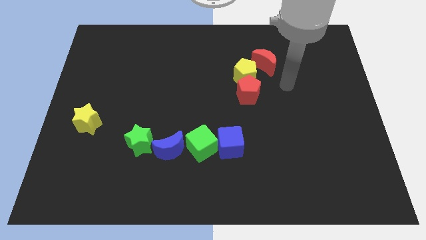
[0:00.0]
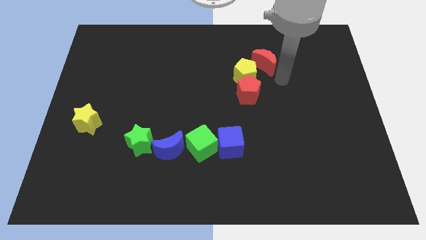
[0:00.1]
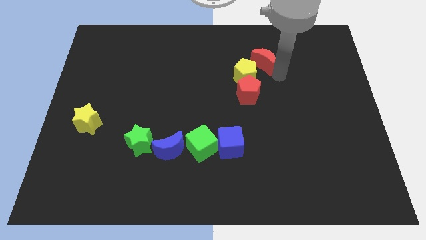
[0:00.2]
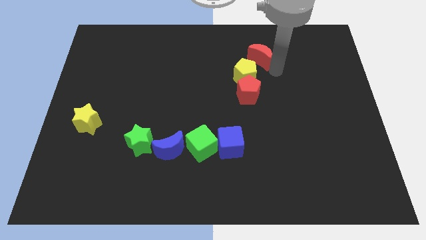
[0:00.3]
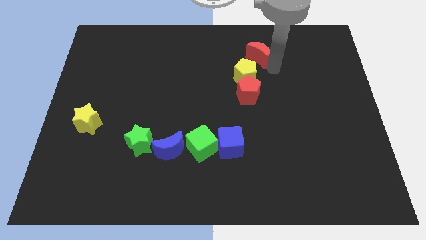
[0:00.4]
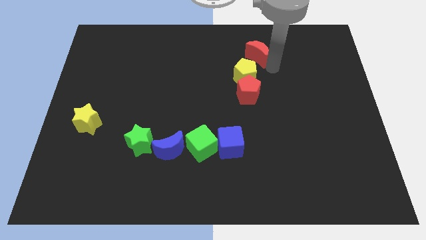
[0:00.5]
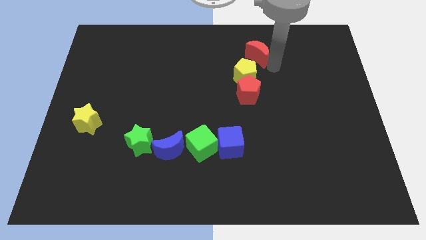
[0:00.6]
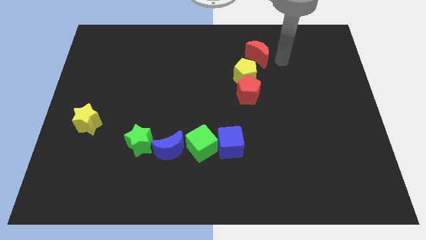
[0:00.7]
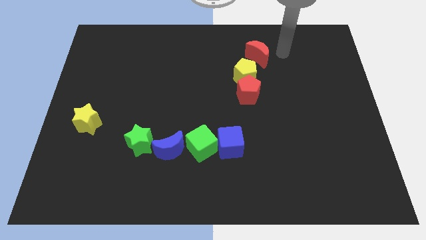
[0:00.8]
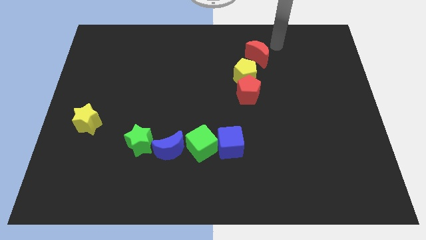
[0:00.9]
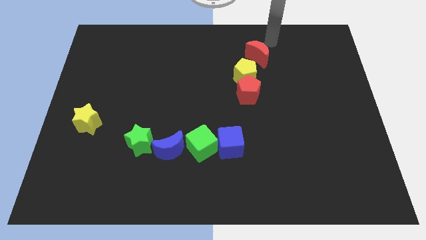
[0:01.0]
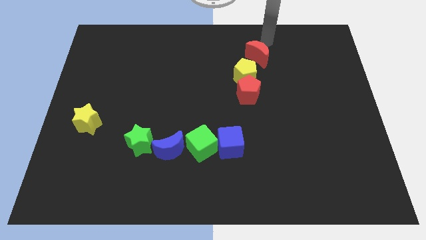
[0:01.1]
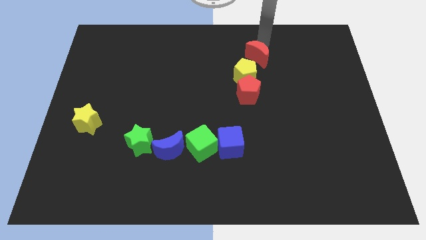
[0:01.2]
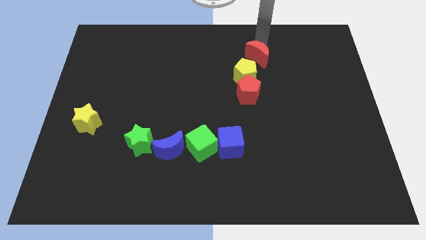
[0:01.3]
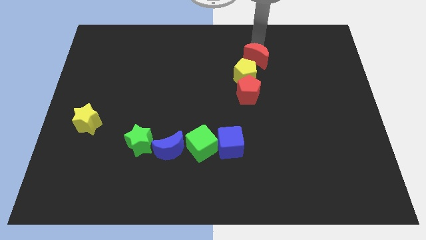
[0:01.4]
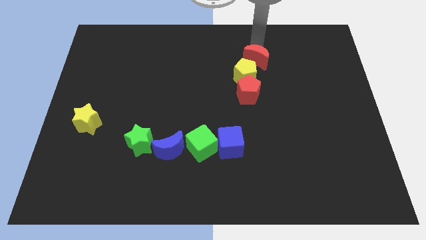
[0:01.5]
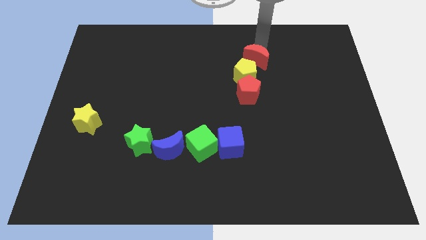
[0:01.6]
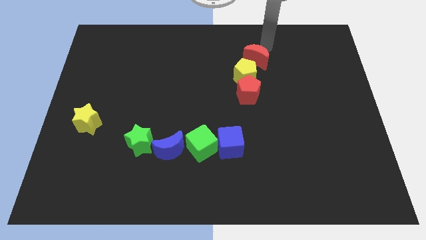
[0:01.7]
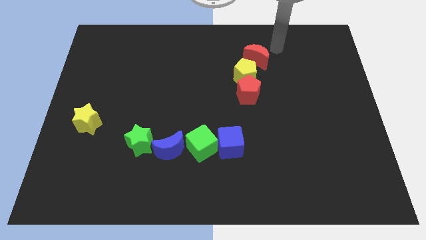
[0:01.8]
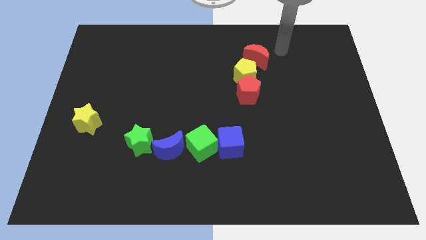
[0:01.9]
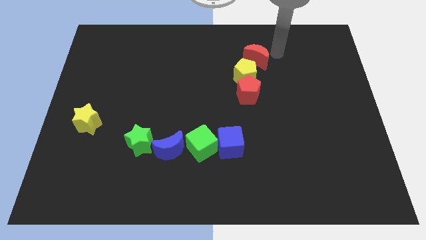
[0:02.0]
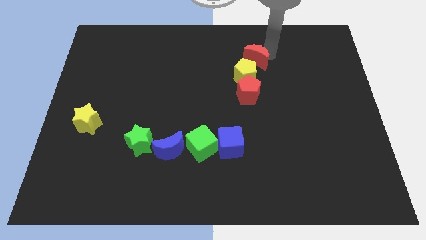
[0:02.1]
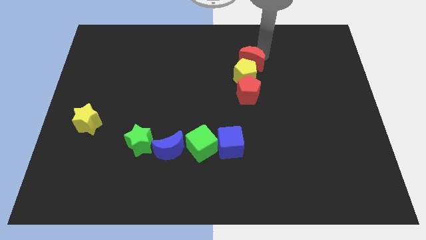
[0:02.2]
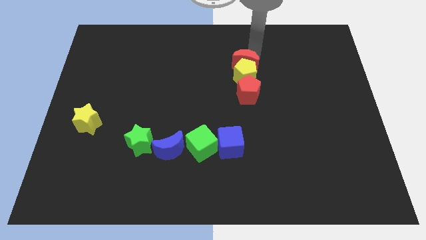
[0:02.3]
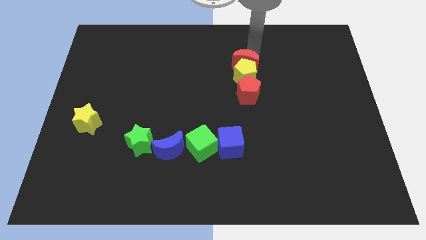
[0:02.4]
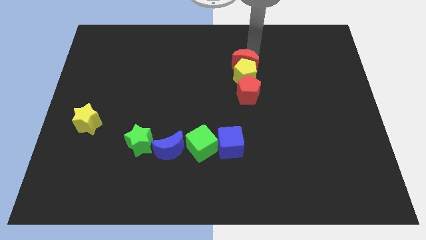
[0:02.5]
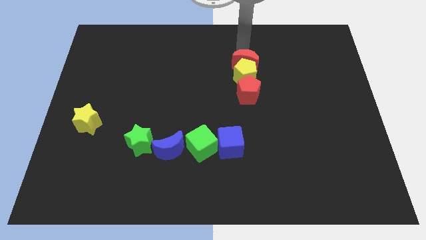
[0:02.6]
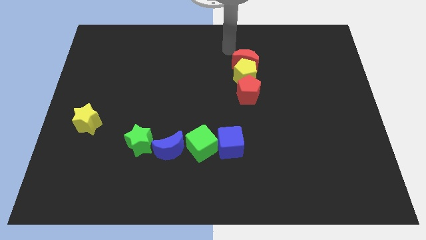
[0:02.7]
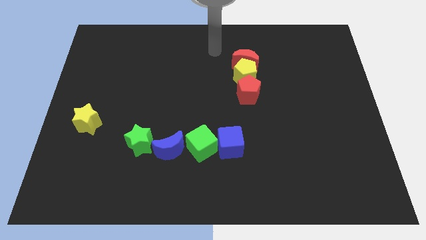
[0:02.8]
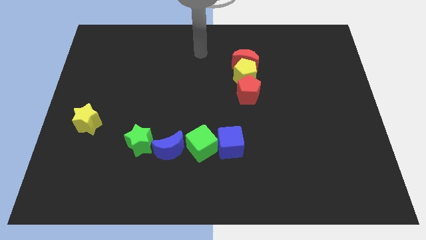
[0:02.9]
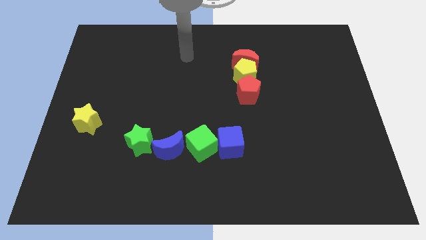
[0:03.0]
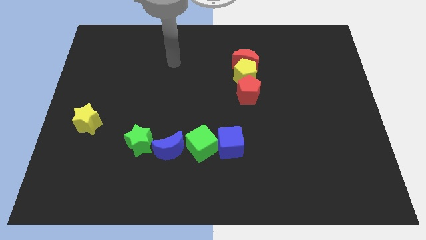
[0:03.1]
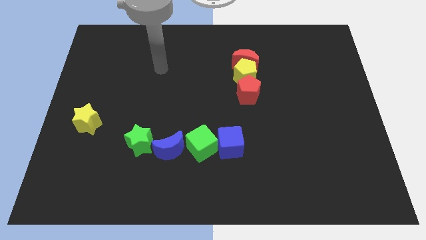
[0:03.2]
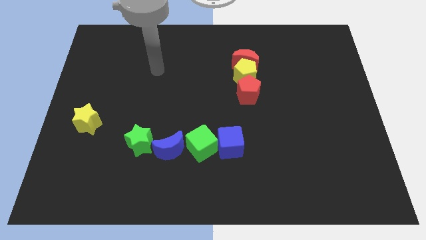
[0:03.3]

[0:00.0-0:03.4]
adjust the red pentagon vertically above the yellow pentagon

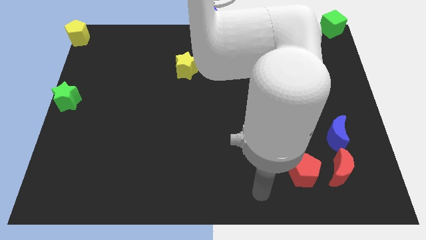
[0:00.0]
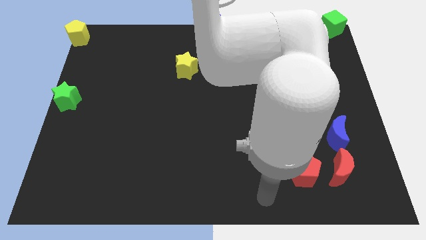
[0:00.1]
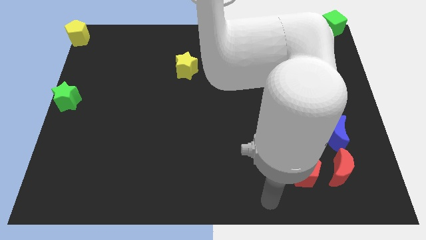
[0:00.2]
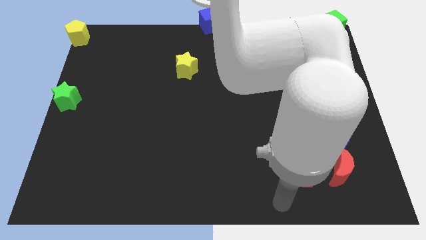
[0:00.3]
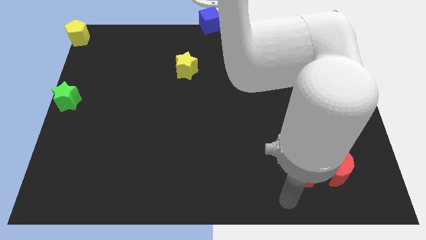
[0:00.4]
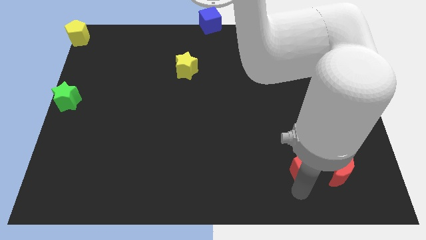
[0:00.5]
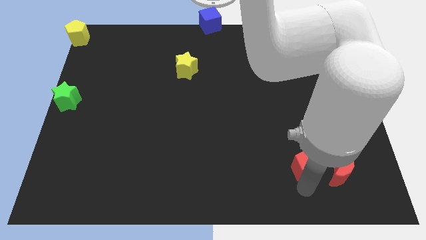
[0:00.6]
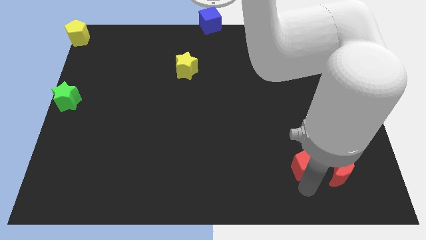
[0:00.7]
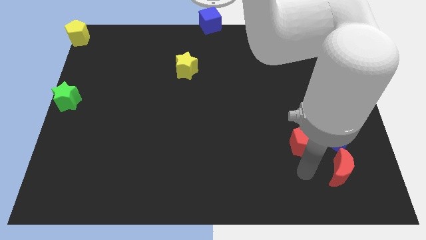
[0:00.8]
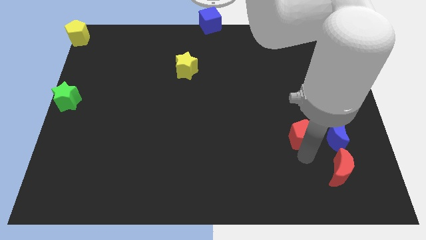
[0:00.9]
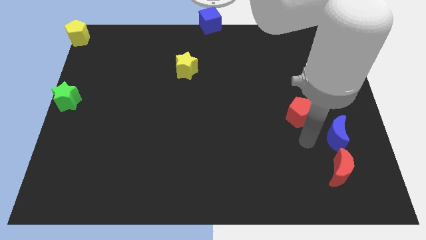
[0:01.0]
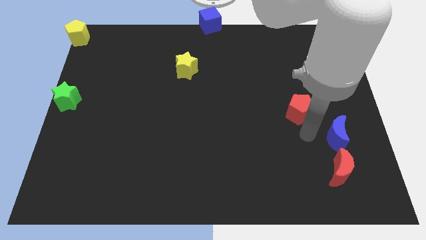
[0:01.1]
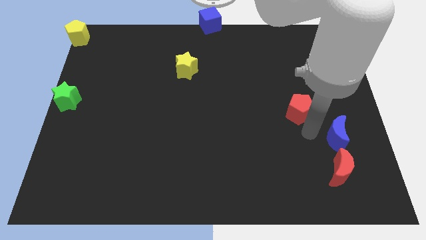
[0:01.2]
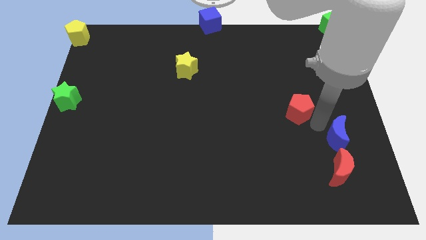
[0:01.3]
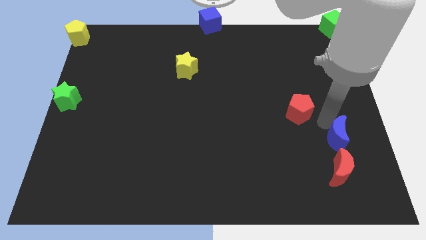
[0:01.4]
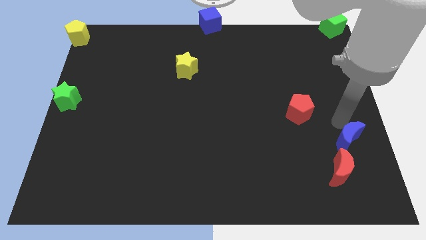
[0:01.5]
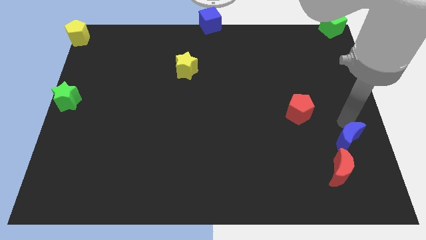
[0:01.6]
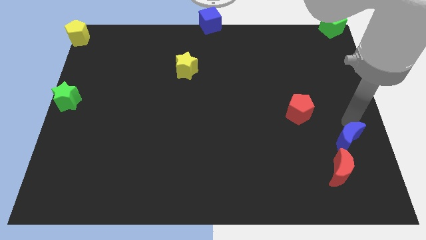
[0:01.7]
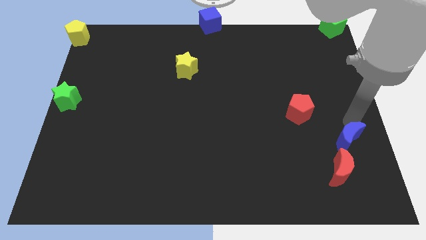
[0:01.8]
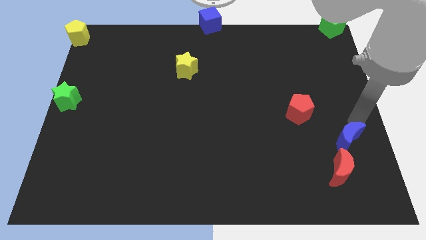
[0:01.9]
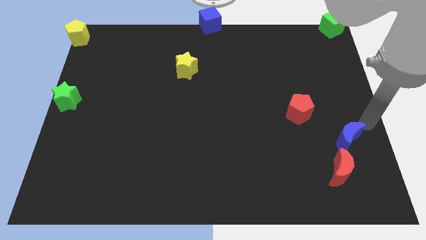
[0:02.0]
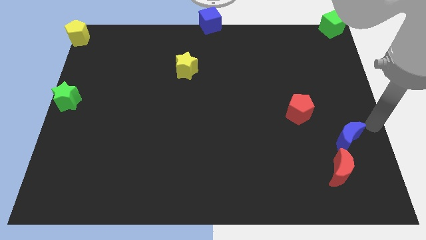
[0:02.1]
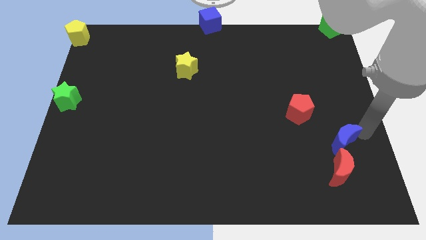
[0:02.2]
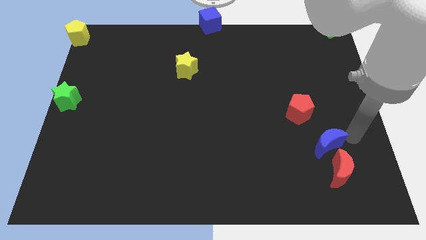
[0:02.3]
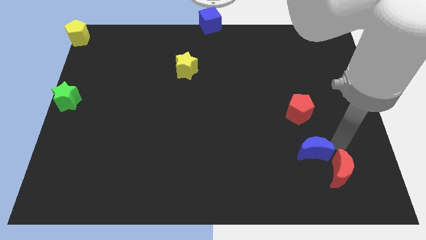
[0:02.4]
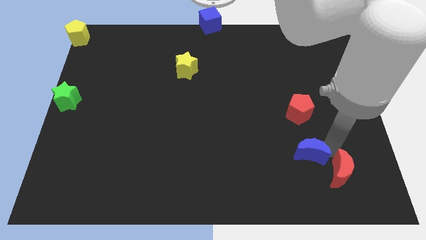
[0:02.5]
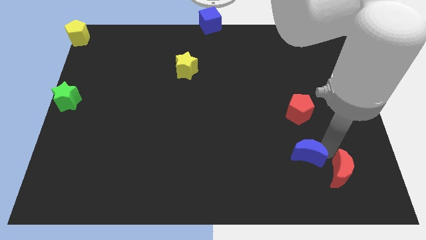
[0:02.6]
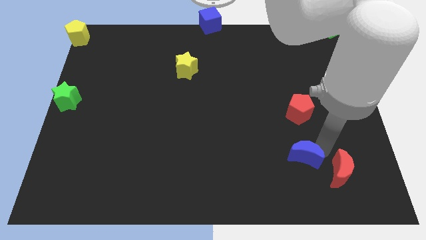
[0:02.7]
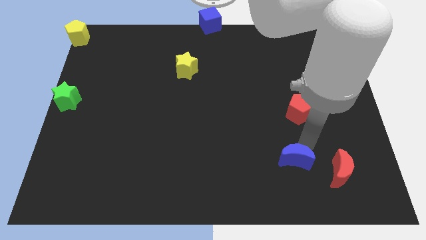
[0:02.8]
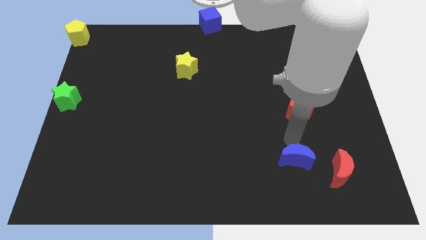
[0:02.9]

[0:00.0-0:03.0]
push blue crescent parallel to the below red pentagon

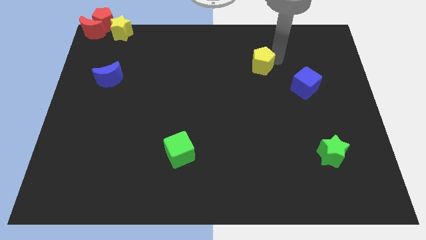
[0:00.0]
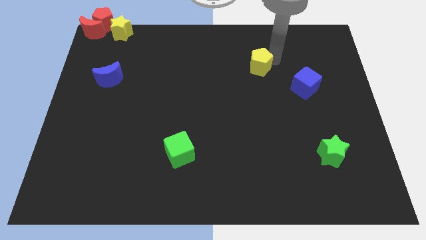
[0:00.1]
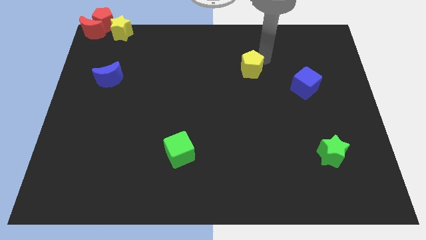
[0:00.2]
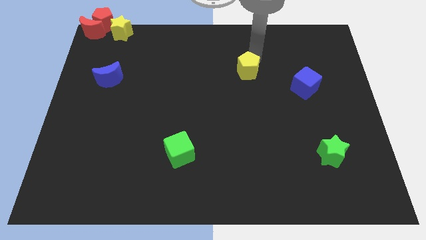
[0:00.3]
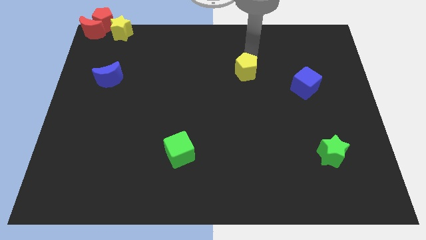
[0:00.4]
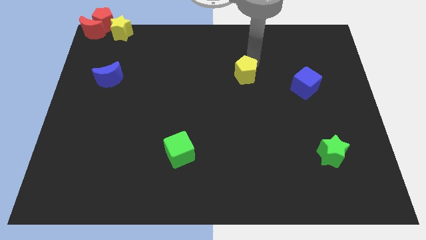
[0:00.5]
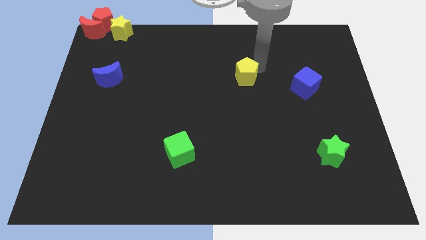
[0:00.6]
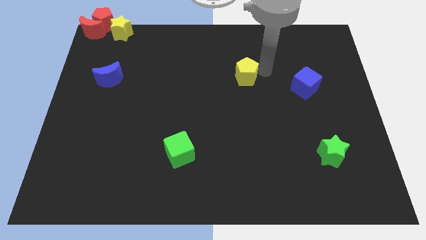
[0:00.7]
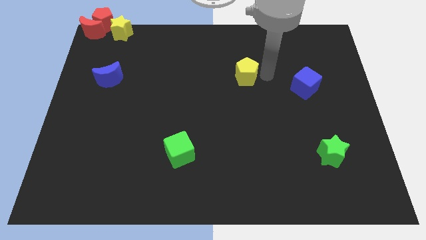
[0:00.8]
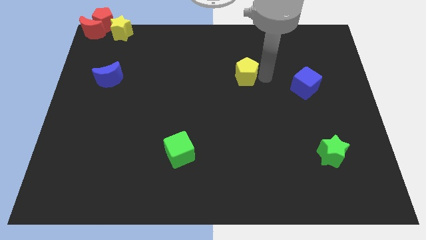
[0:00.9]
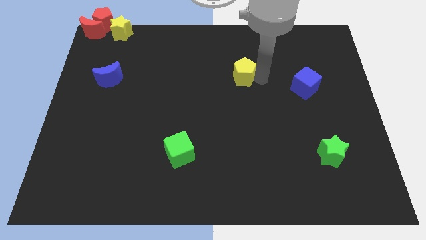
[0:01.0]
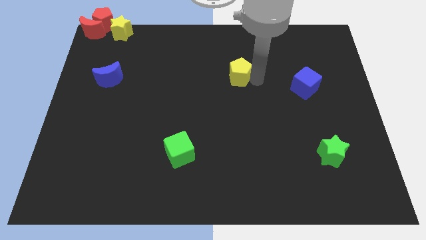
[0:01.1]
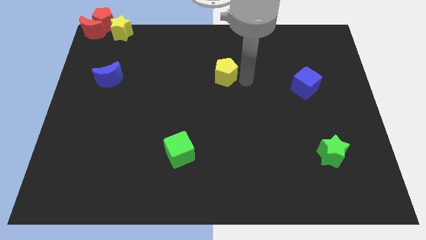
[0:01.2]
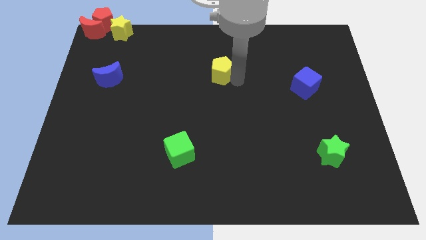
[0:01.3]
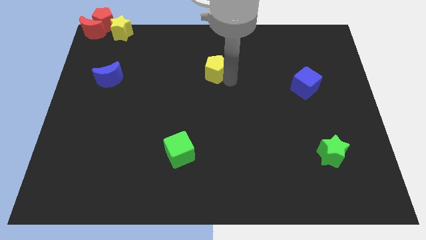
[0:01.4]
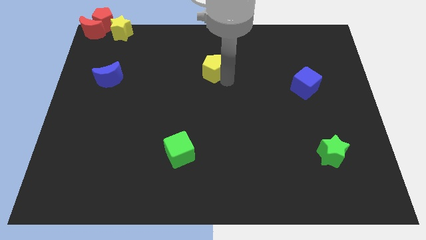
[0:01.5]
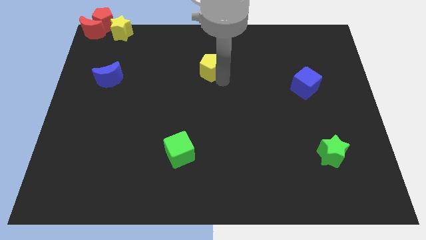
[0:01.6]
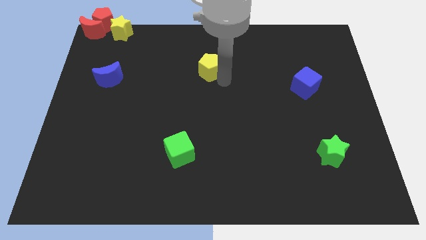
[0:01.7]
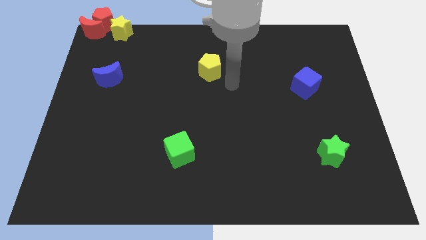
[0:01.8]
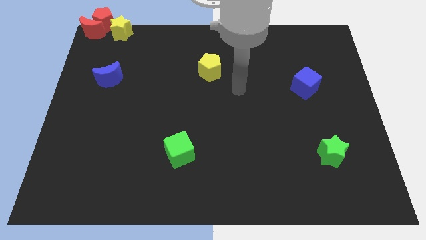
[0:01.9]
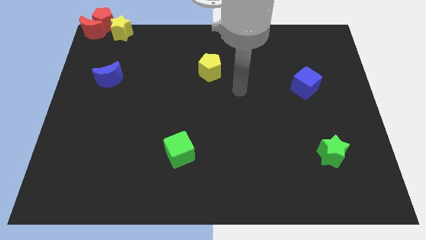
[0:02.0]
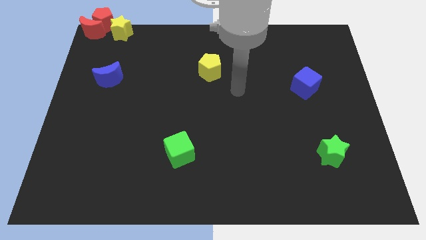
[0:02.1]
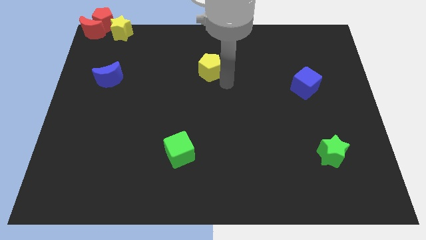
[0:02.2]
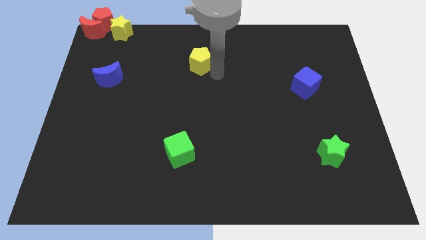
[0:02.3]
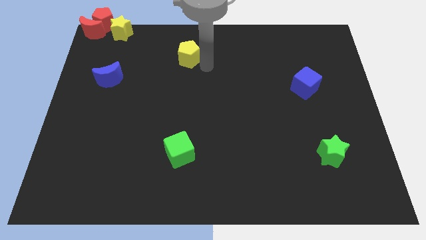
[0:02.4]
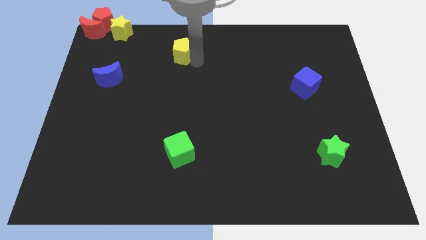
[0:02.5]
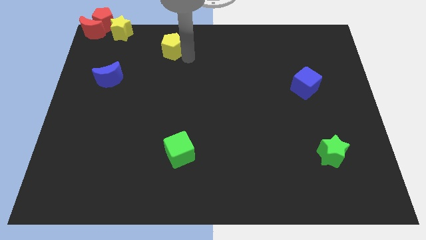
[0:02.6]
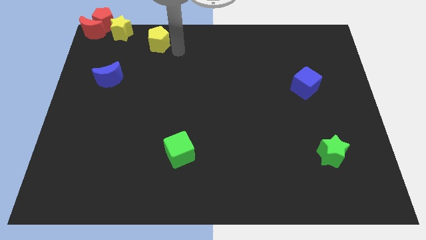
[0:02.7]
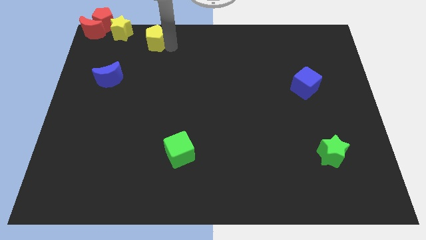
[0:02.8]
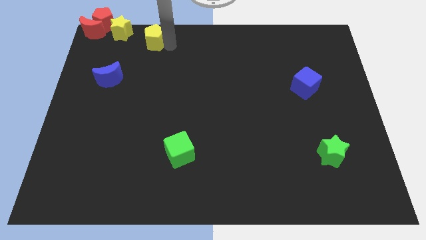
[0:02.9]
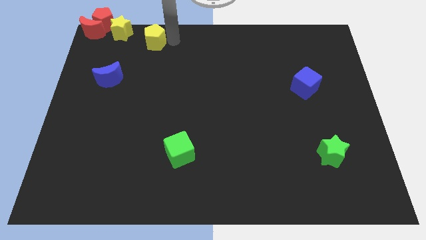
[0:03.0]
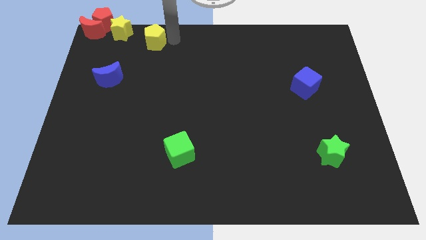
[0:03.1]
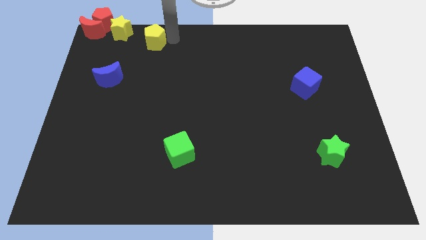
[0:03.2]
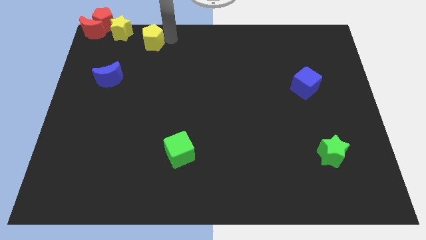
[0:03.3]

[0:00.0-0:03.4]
push the yellow pentagon towards the top left corner of the board
